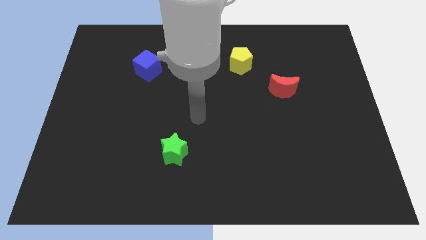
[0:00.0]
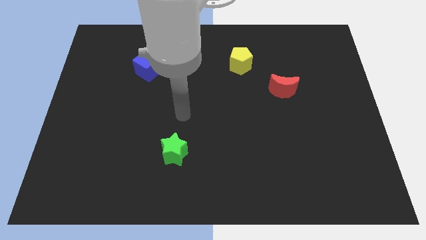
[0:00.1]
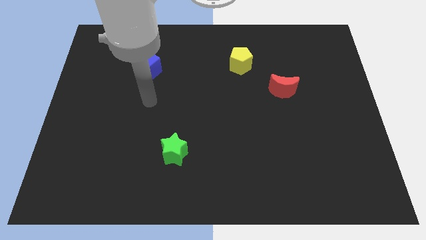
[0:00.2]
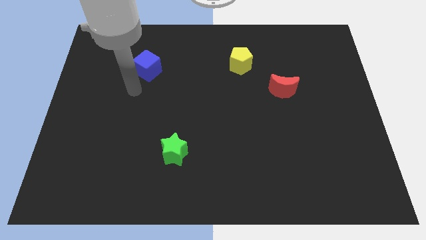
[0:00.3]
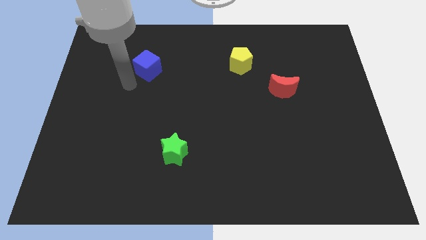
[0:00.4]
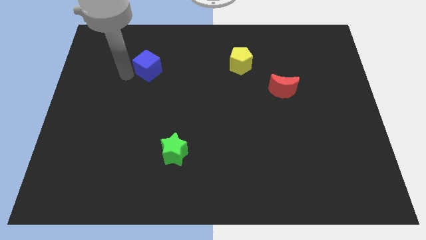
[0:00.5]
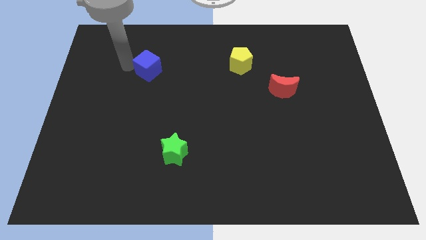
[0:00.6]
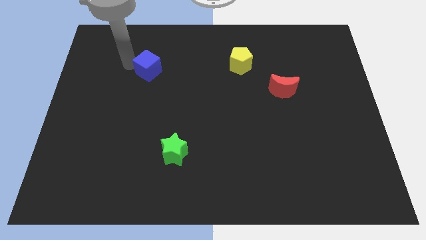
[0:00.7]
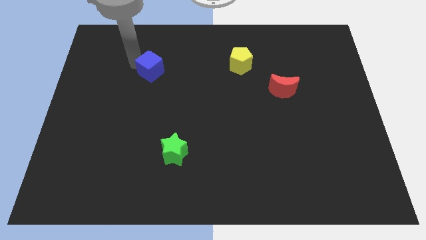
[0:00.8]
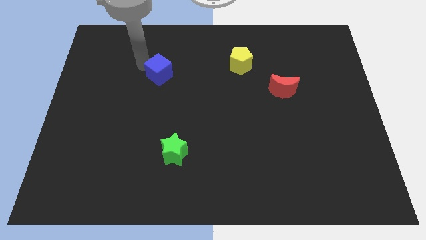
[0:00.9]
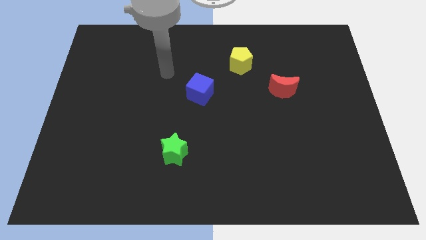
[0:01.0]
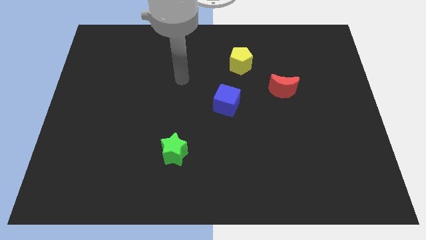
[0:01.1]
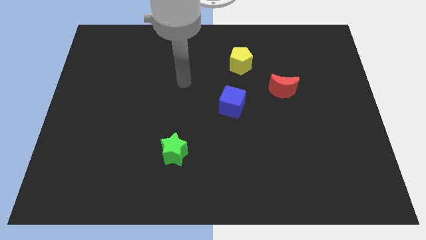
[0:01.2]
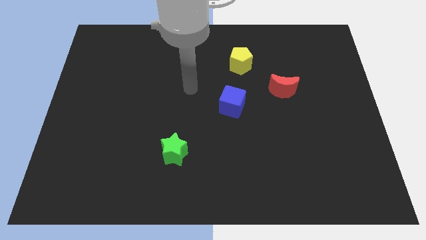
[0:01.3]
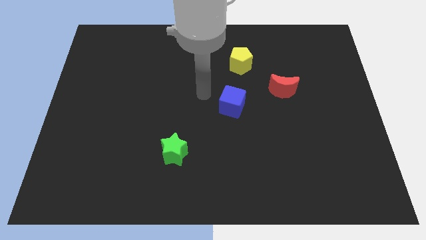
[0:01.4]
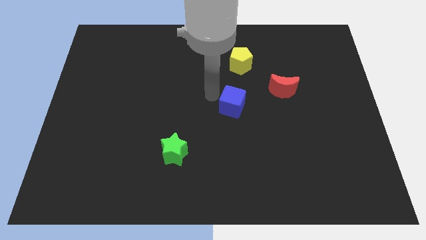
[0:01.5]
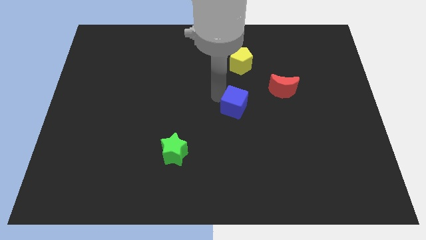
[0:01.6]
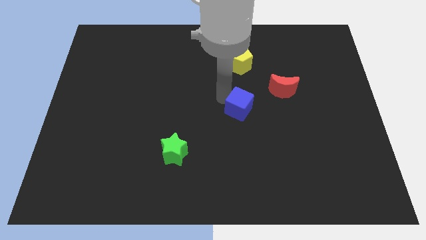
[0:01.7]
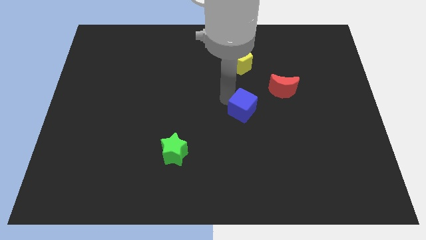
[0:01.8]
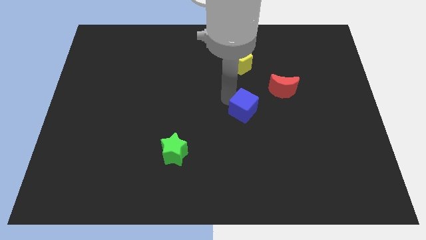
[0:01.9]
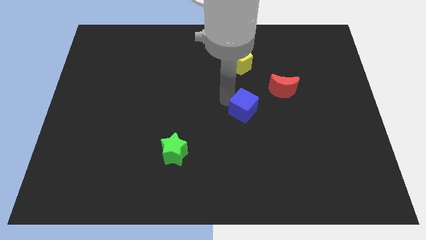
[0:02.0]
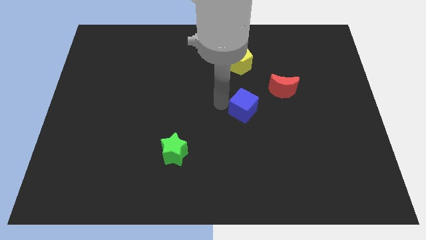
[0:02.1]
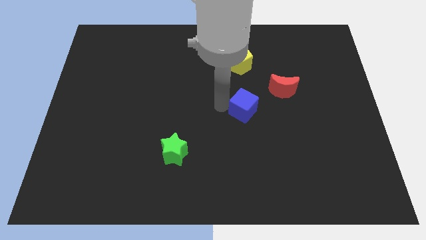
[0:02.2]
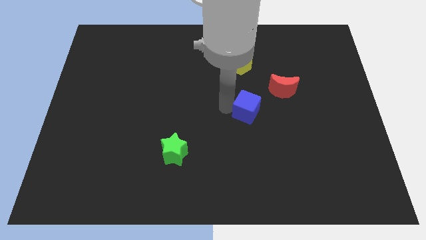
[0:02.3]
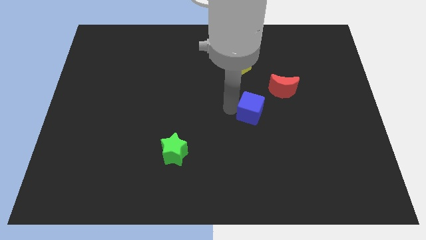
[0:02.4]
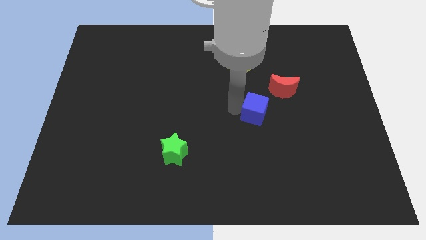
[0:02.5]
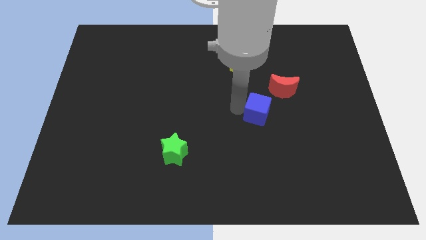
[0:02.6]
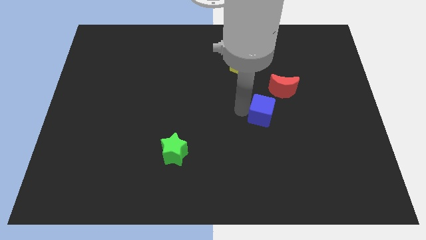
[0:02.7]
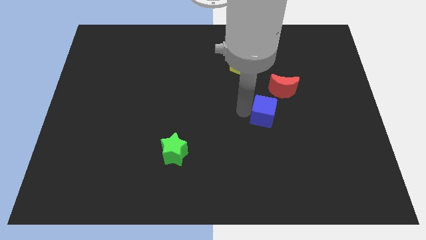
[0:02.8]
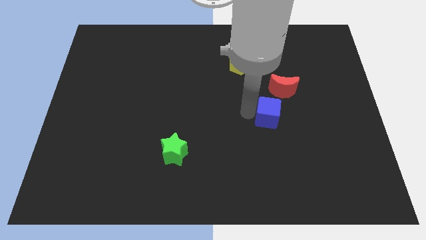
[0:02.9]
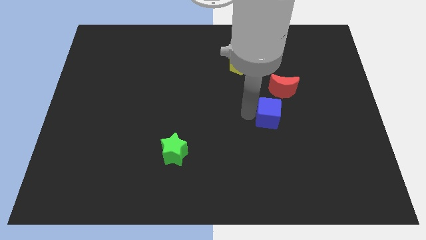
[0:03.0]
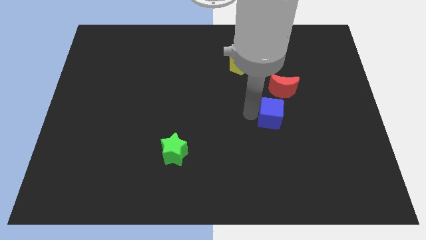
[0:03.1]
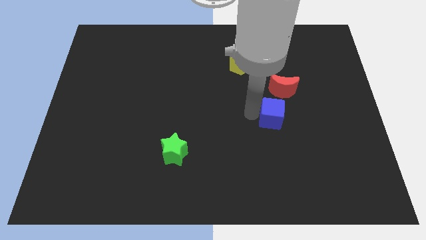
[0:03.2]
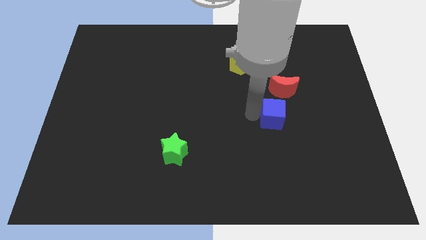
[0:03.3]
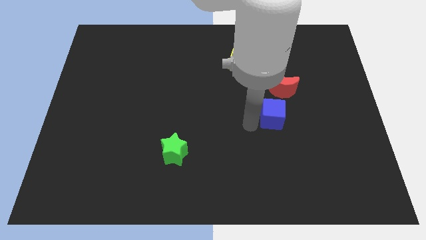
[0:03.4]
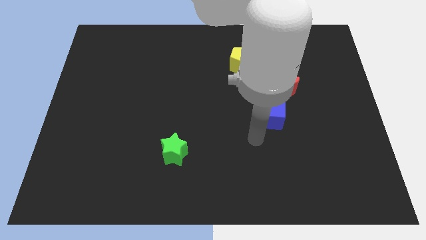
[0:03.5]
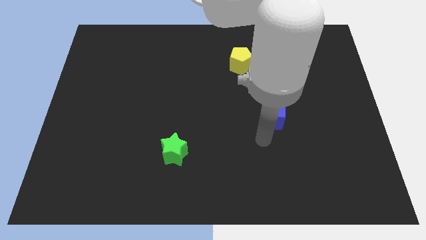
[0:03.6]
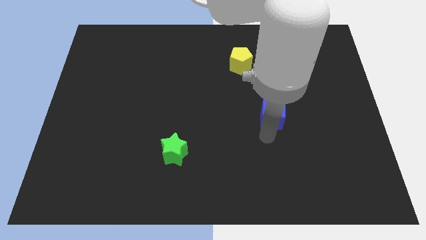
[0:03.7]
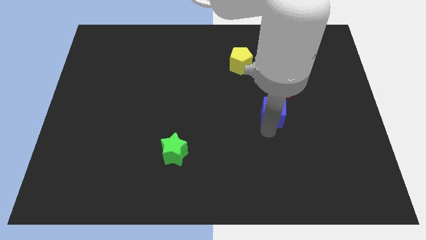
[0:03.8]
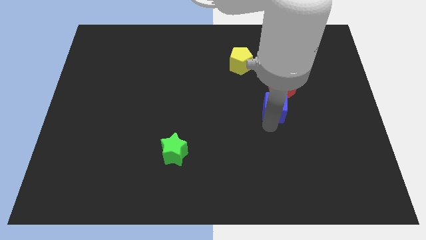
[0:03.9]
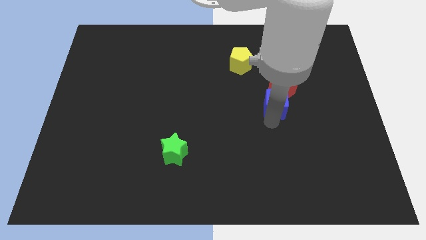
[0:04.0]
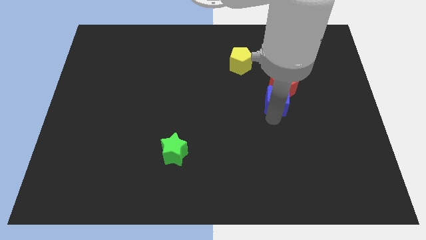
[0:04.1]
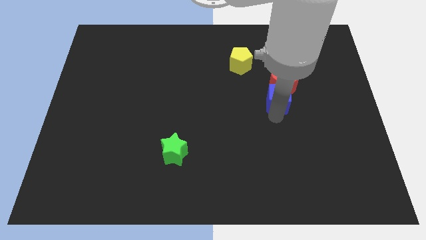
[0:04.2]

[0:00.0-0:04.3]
slide the cube close to the red moon

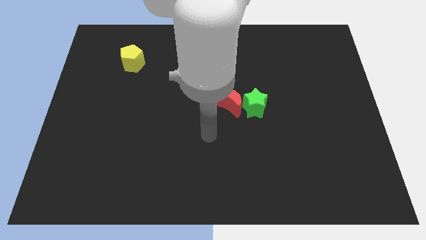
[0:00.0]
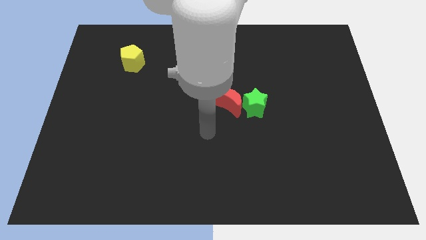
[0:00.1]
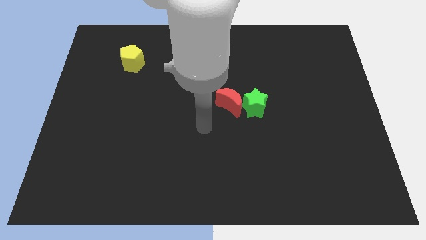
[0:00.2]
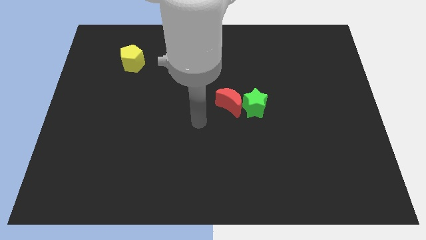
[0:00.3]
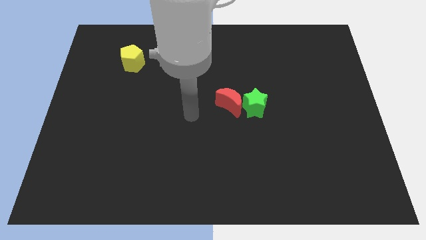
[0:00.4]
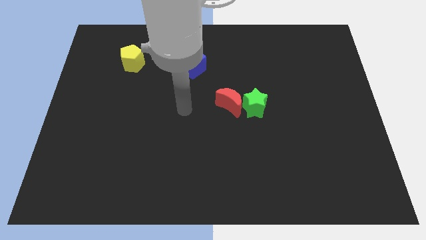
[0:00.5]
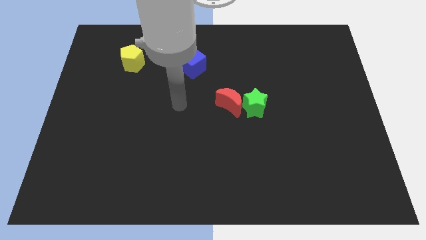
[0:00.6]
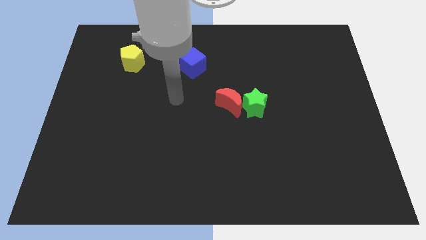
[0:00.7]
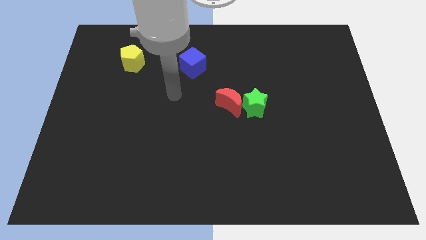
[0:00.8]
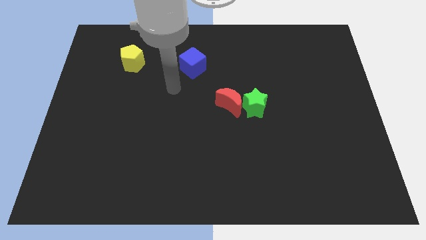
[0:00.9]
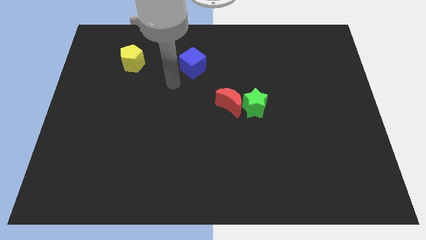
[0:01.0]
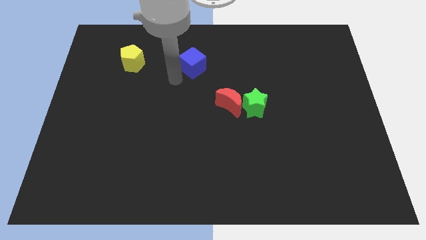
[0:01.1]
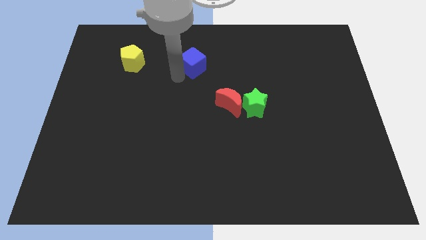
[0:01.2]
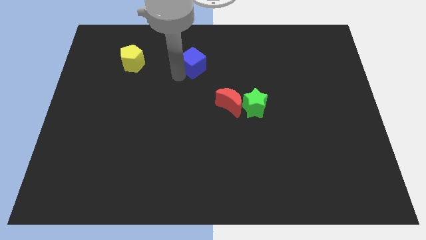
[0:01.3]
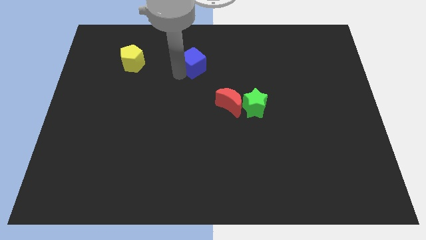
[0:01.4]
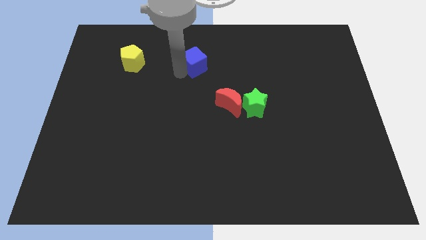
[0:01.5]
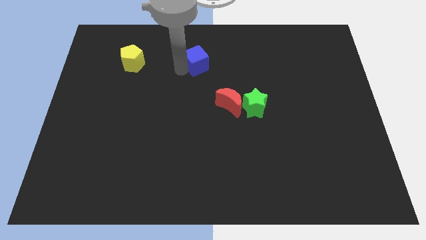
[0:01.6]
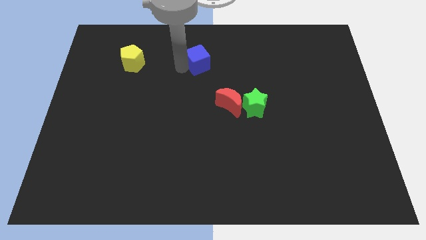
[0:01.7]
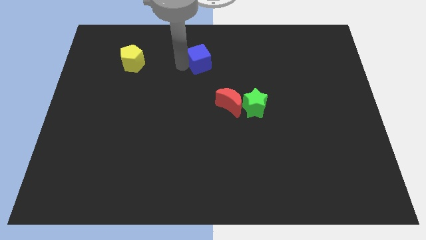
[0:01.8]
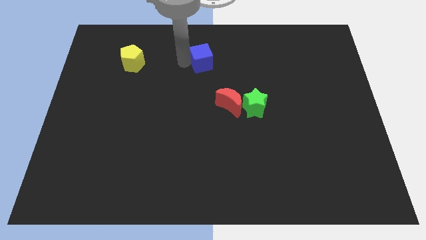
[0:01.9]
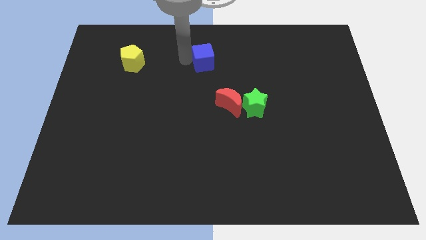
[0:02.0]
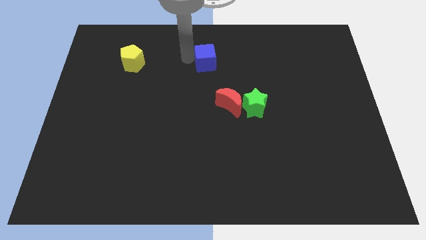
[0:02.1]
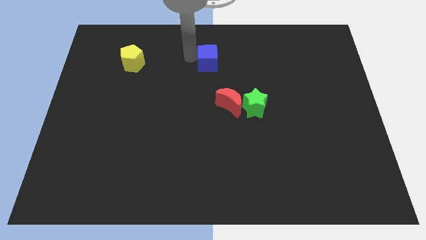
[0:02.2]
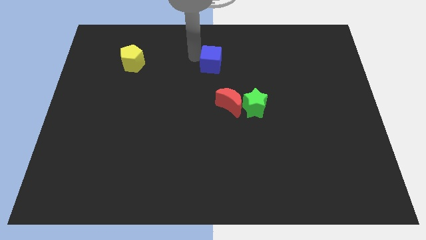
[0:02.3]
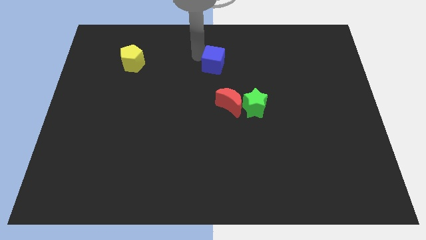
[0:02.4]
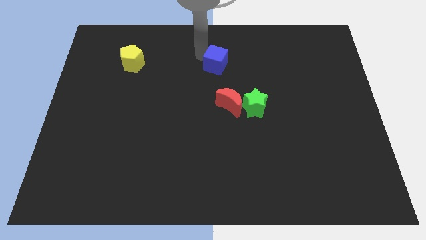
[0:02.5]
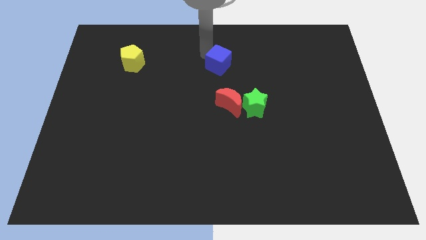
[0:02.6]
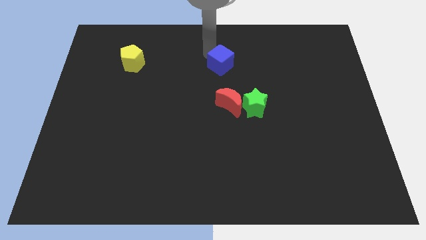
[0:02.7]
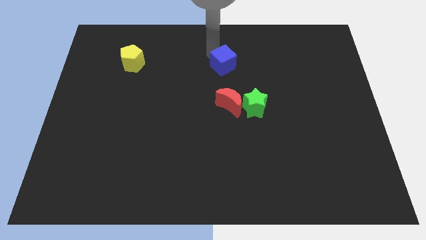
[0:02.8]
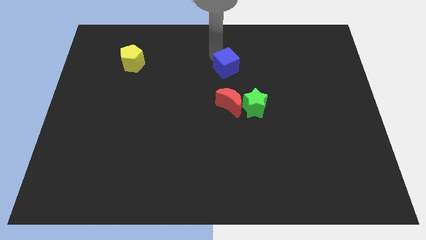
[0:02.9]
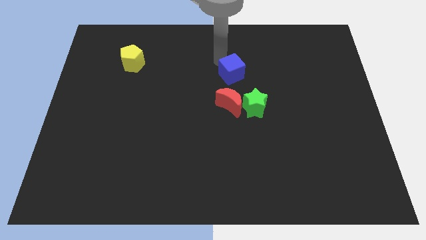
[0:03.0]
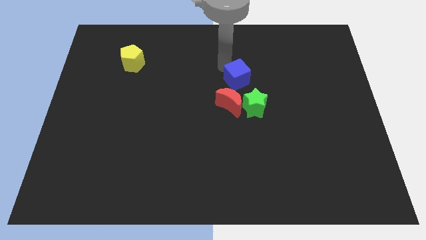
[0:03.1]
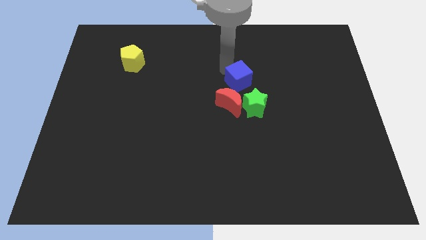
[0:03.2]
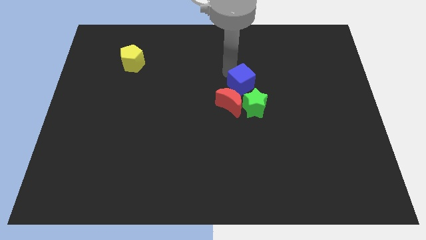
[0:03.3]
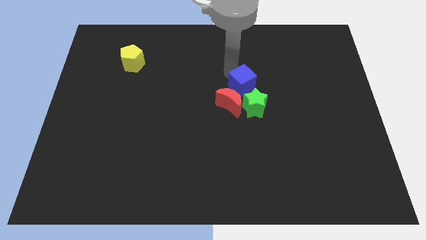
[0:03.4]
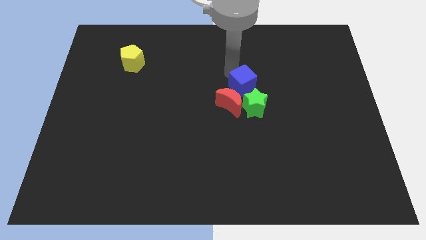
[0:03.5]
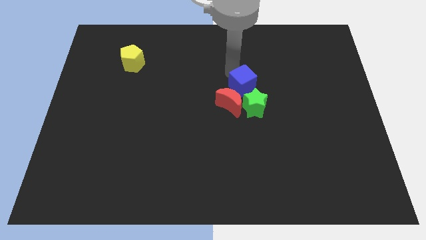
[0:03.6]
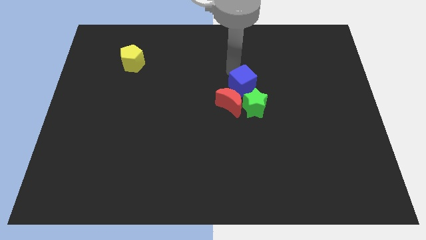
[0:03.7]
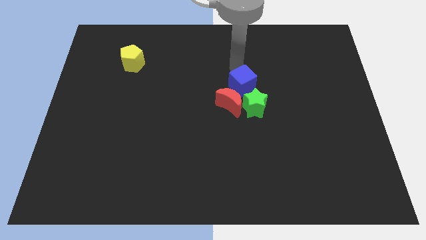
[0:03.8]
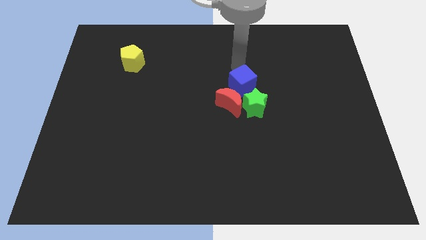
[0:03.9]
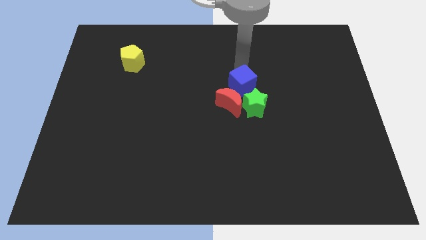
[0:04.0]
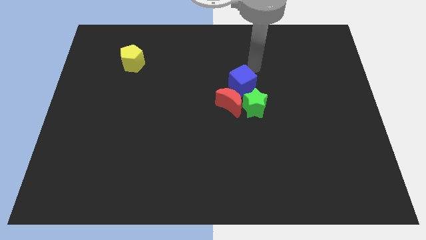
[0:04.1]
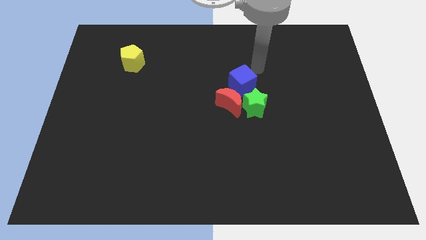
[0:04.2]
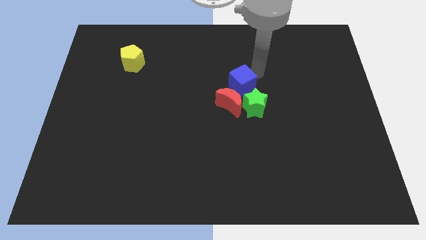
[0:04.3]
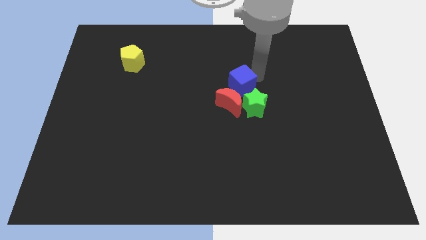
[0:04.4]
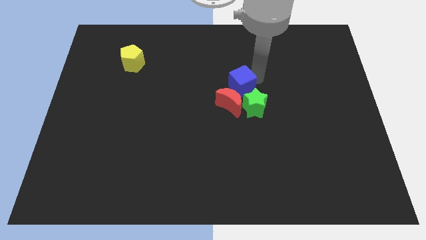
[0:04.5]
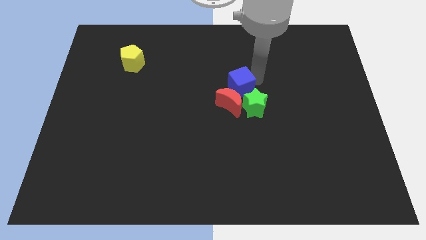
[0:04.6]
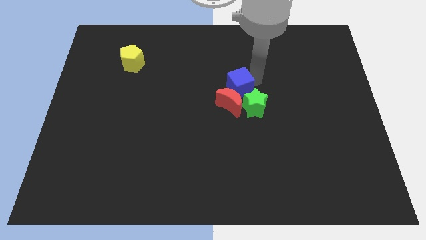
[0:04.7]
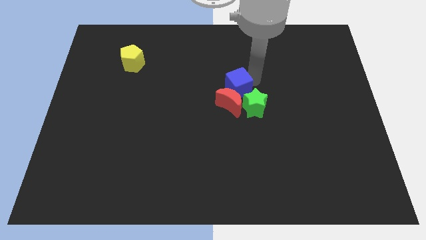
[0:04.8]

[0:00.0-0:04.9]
push the cube next to the moon
